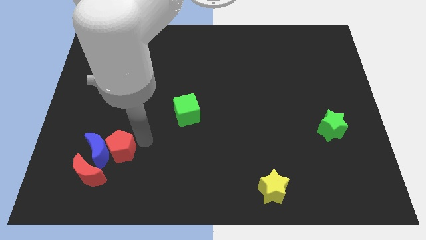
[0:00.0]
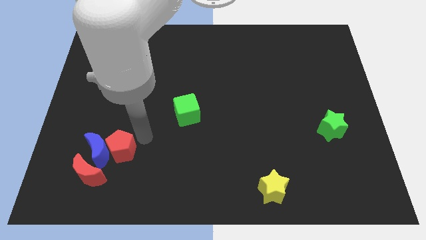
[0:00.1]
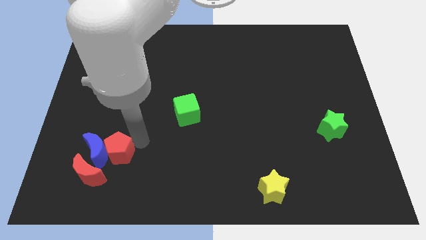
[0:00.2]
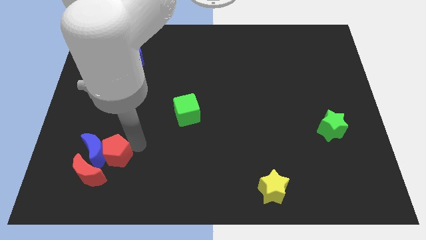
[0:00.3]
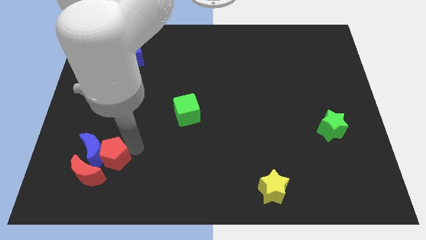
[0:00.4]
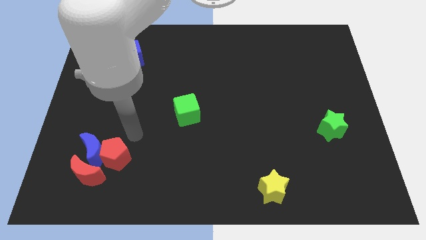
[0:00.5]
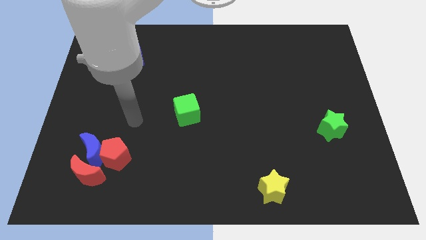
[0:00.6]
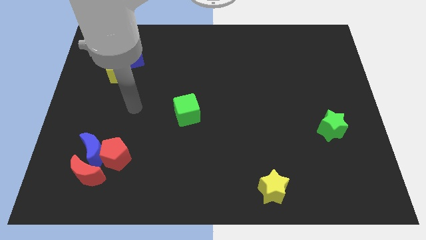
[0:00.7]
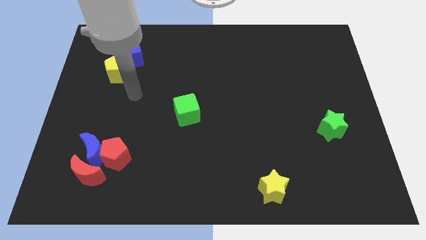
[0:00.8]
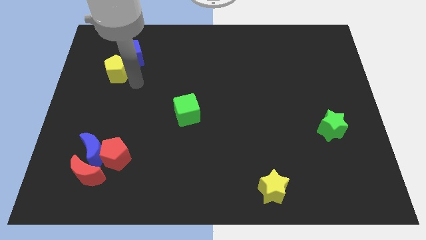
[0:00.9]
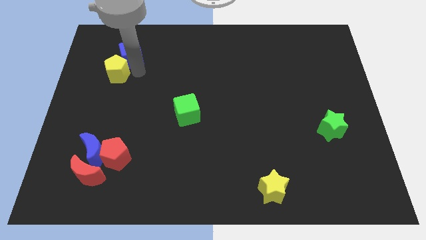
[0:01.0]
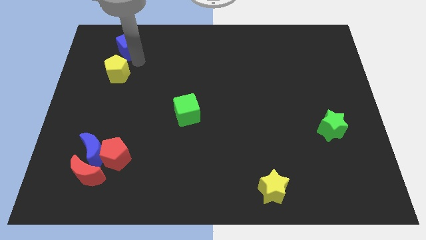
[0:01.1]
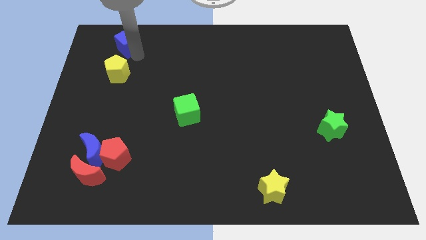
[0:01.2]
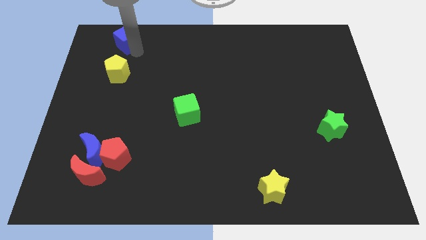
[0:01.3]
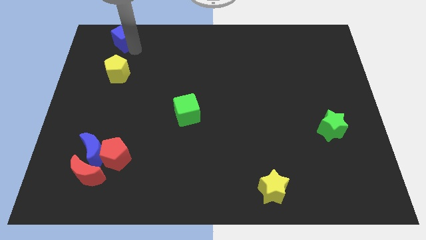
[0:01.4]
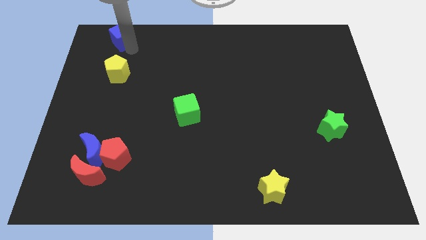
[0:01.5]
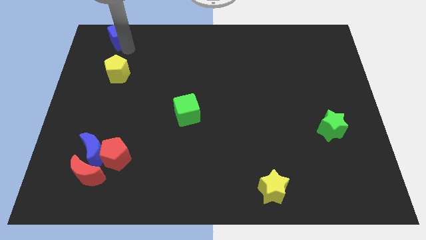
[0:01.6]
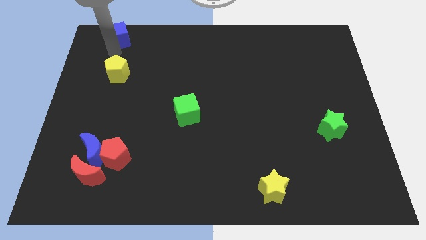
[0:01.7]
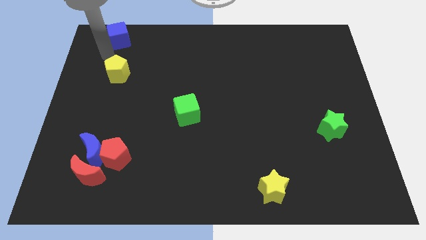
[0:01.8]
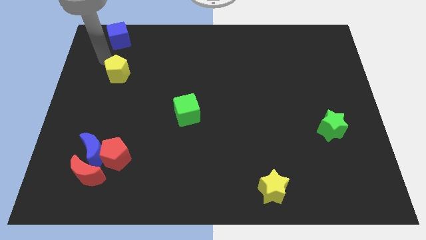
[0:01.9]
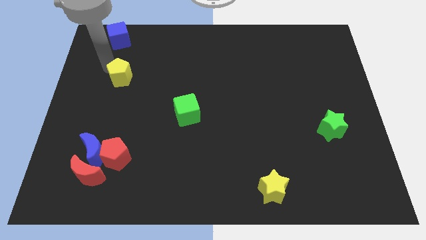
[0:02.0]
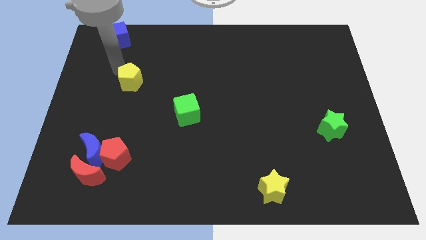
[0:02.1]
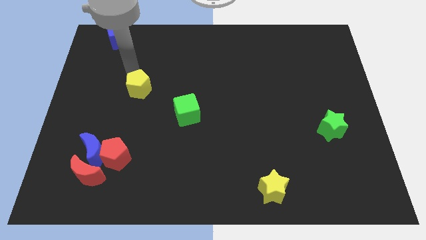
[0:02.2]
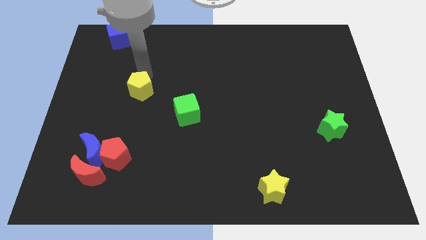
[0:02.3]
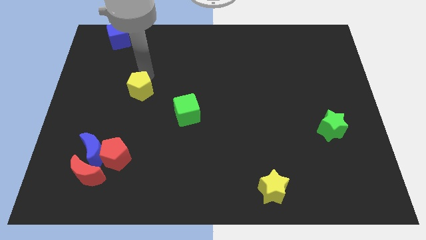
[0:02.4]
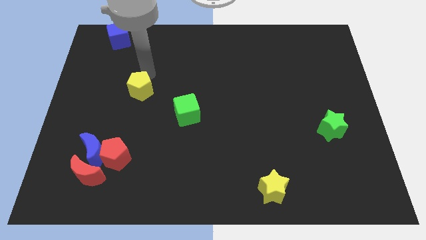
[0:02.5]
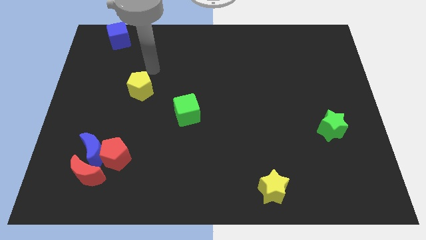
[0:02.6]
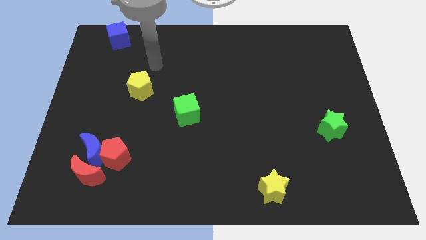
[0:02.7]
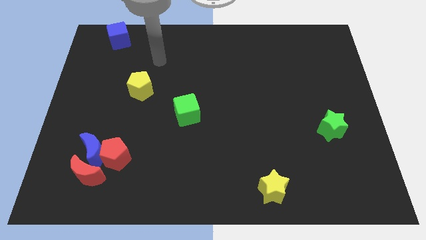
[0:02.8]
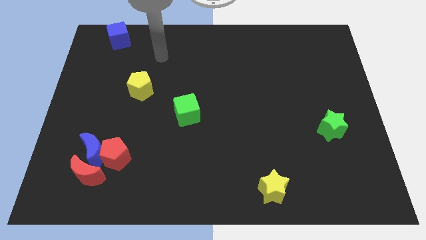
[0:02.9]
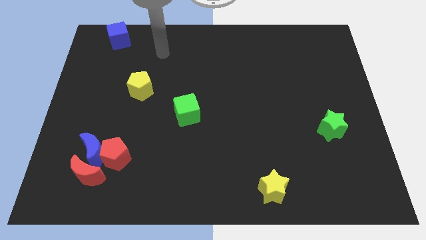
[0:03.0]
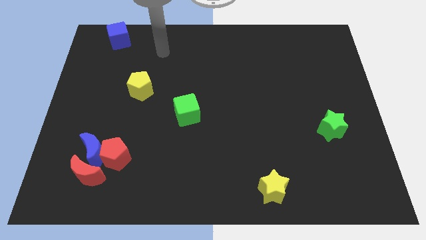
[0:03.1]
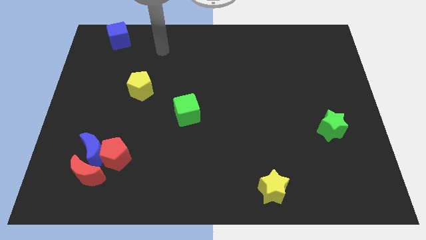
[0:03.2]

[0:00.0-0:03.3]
move the yellow pentagon to the top left of the green cube

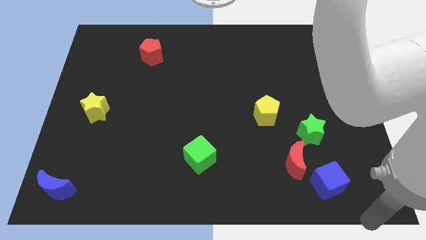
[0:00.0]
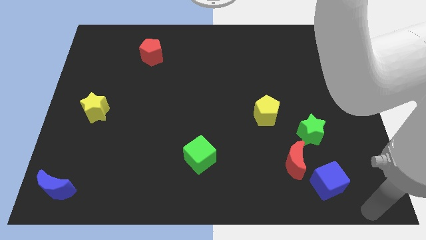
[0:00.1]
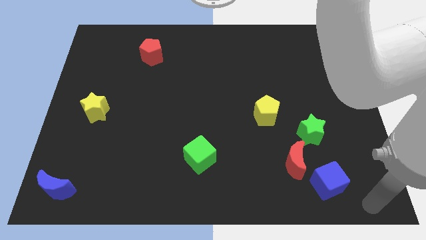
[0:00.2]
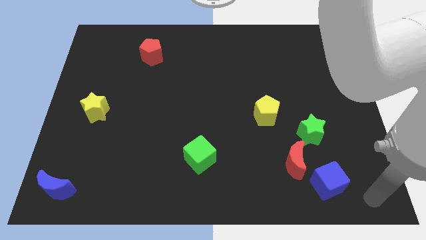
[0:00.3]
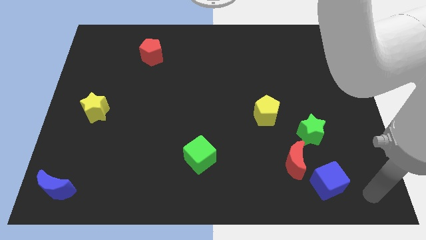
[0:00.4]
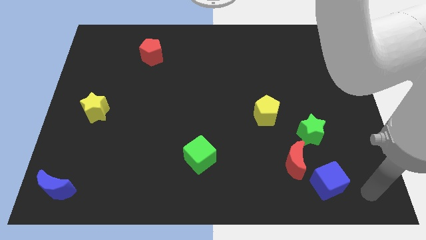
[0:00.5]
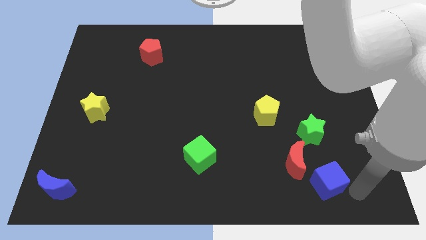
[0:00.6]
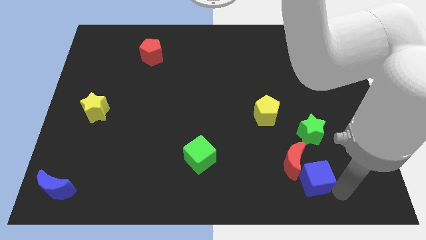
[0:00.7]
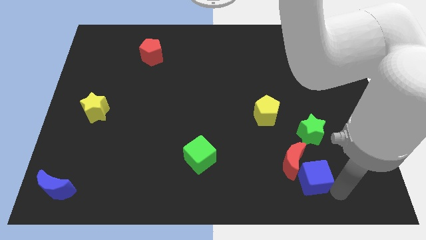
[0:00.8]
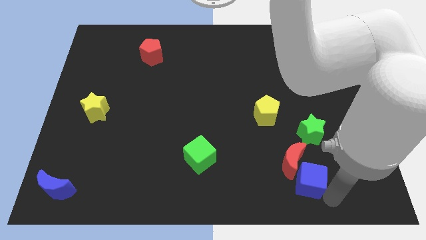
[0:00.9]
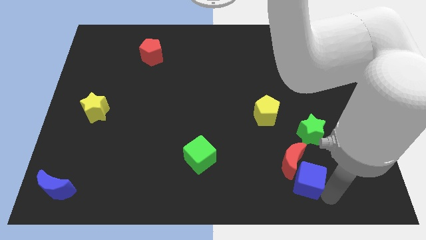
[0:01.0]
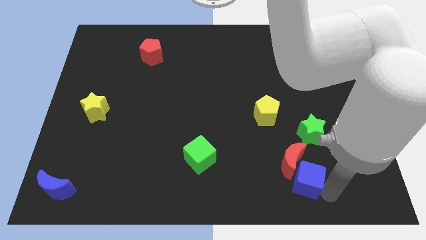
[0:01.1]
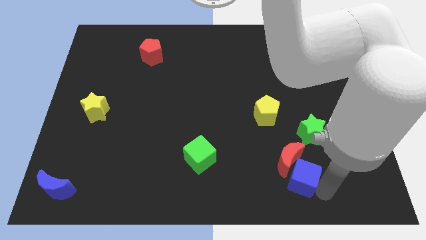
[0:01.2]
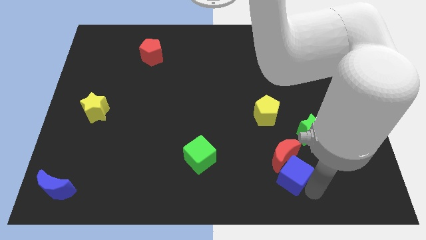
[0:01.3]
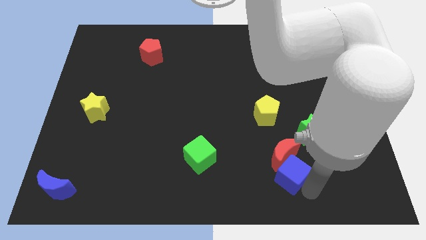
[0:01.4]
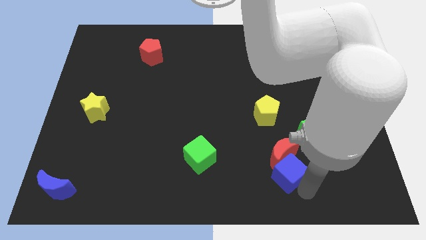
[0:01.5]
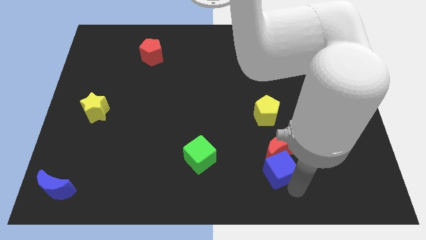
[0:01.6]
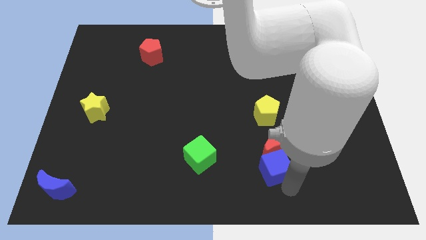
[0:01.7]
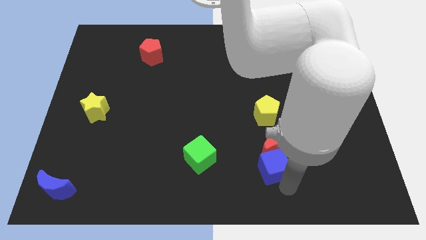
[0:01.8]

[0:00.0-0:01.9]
push the blue cube and red moon towards the top side of the board

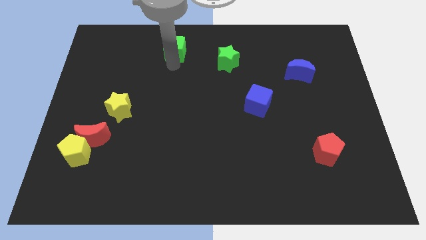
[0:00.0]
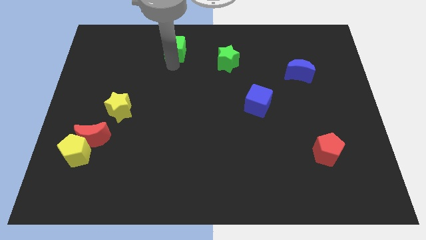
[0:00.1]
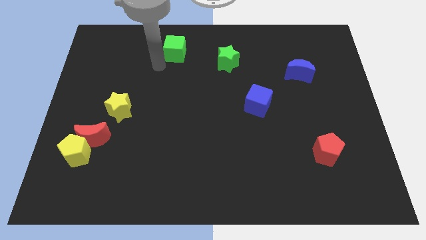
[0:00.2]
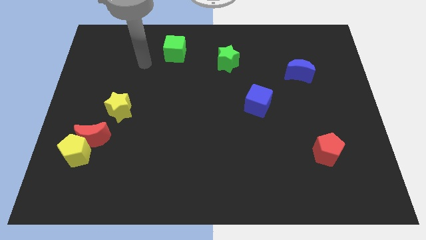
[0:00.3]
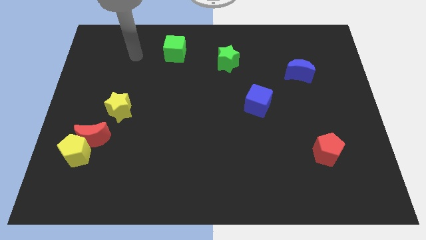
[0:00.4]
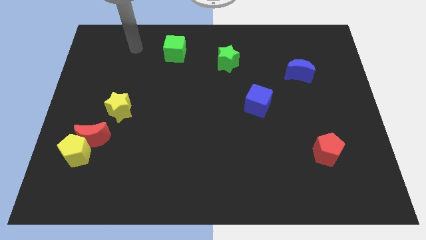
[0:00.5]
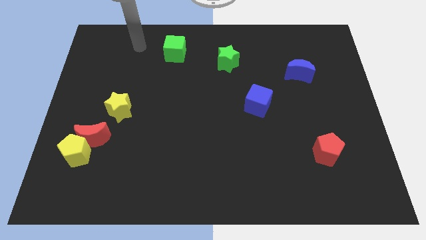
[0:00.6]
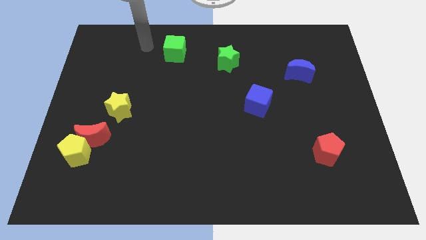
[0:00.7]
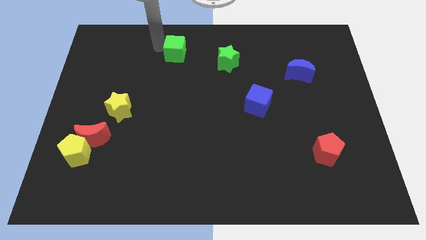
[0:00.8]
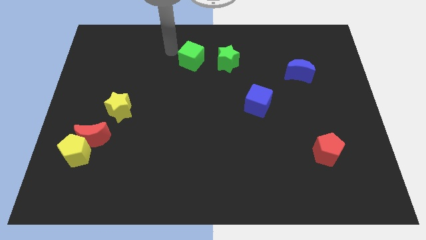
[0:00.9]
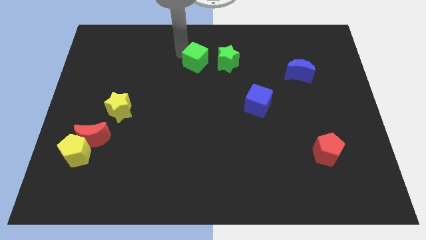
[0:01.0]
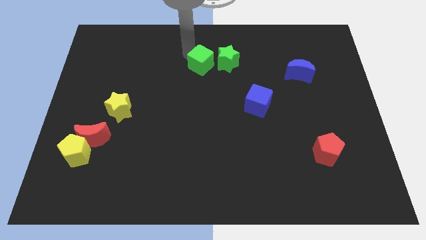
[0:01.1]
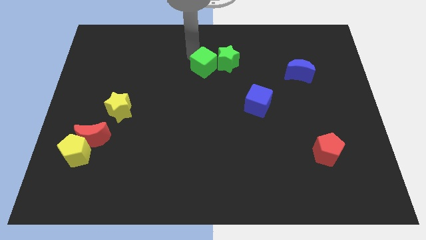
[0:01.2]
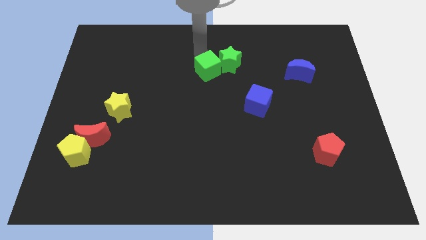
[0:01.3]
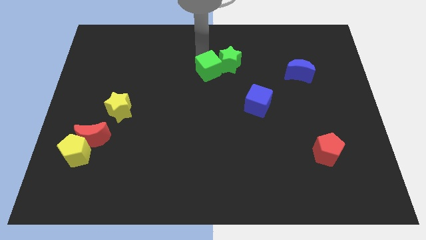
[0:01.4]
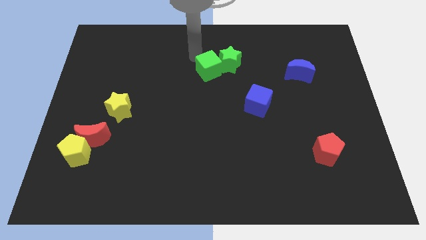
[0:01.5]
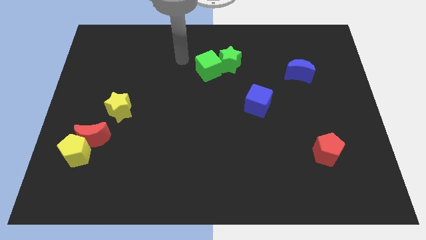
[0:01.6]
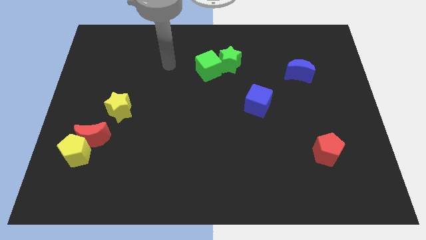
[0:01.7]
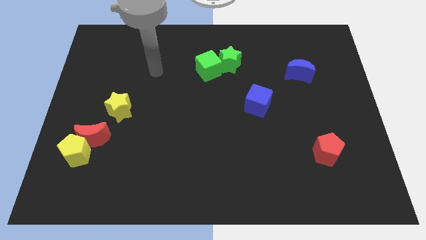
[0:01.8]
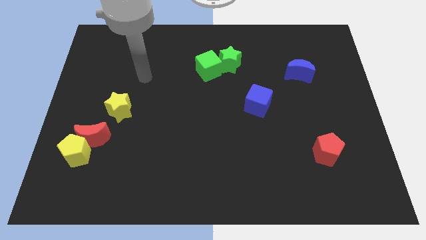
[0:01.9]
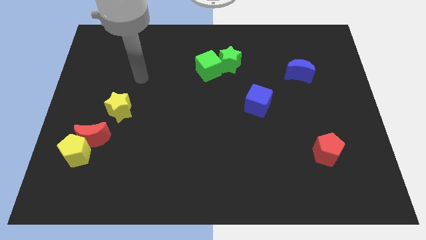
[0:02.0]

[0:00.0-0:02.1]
push the green cube into the green star

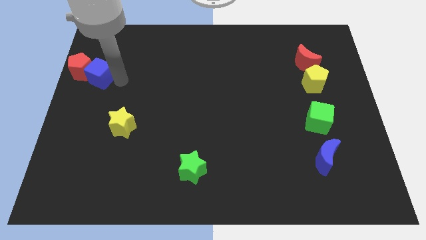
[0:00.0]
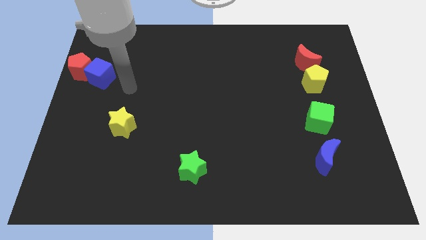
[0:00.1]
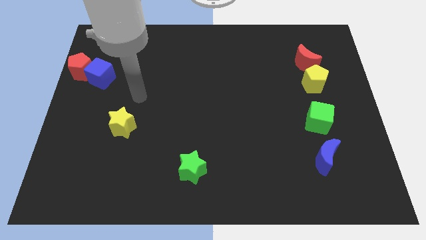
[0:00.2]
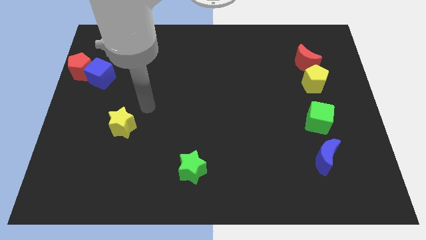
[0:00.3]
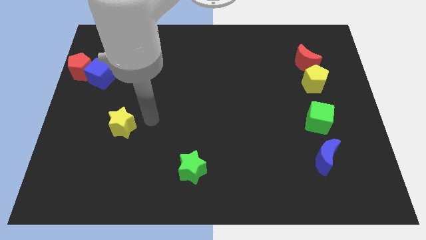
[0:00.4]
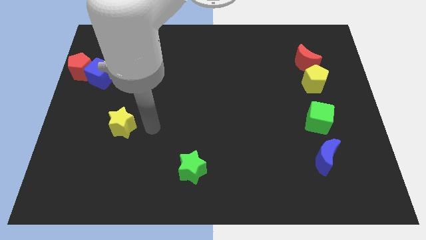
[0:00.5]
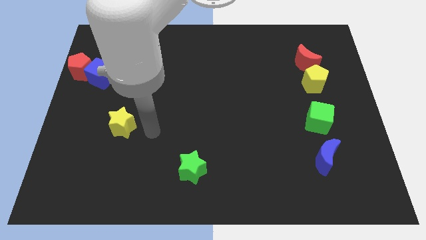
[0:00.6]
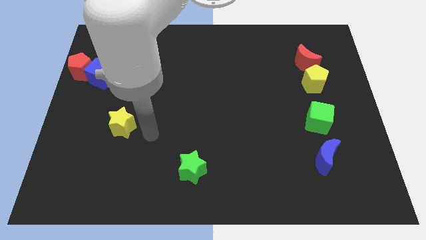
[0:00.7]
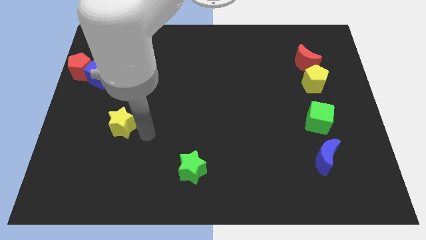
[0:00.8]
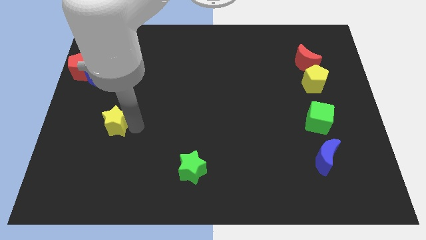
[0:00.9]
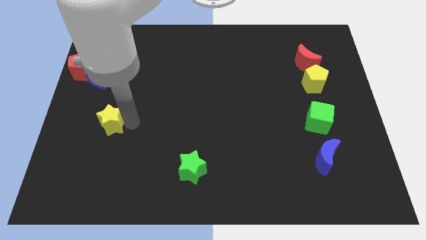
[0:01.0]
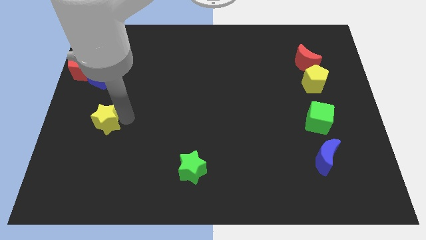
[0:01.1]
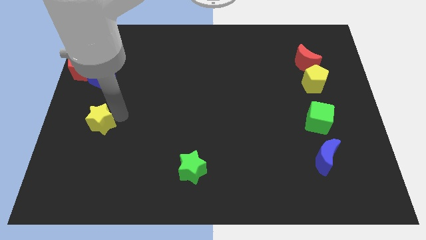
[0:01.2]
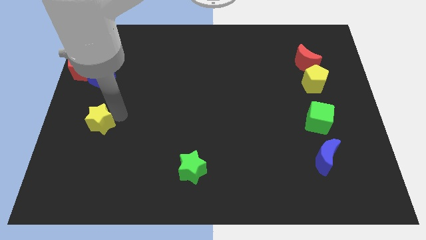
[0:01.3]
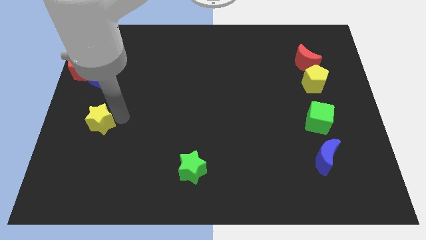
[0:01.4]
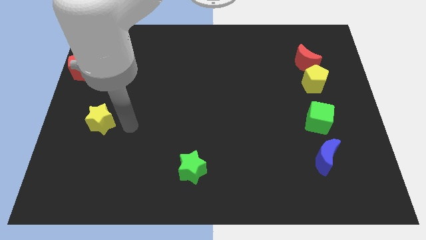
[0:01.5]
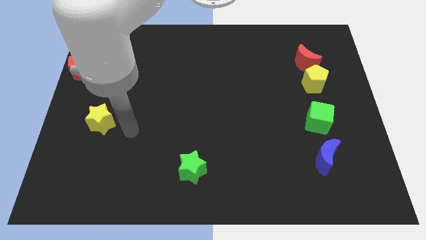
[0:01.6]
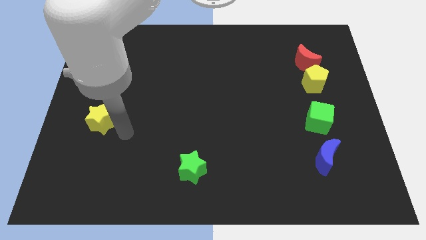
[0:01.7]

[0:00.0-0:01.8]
place the yellow star below the bue cube

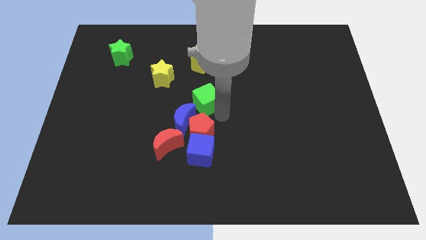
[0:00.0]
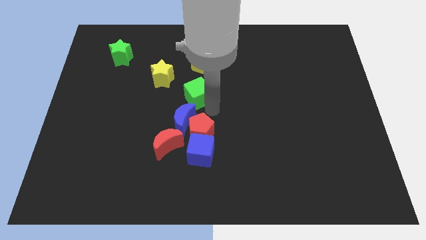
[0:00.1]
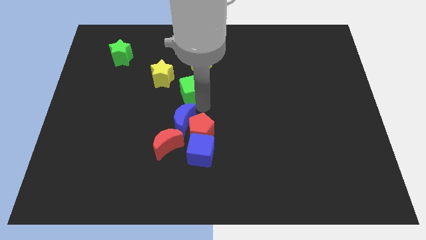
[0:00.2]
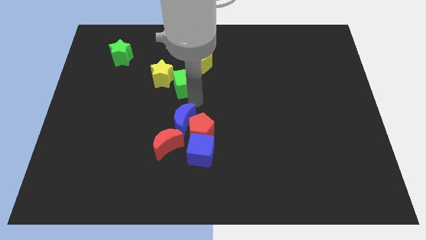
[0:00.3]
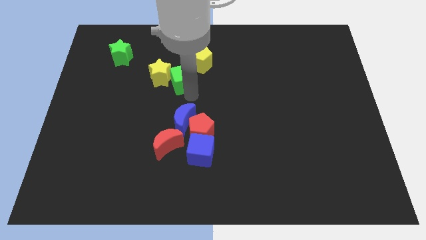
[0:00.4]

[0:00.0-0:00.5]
place the green cube vertically above the blue crescent
